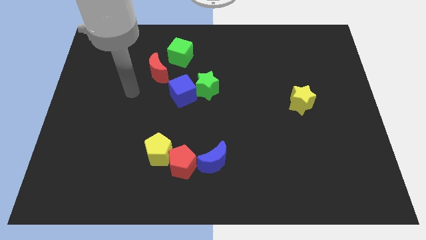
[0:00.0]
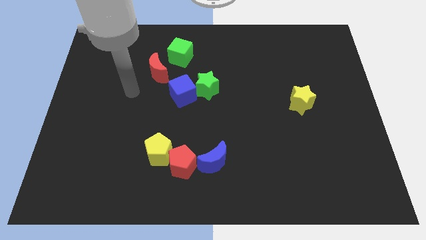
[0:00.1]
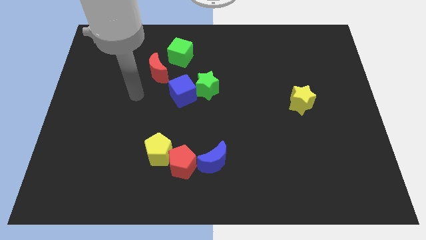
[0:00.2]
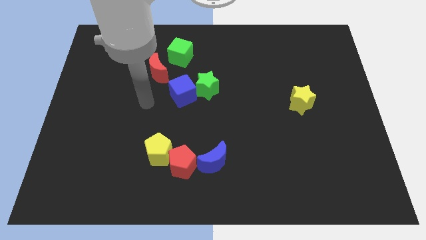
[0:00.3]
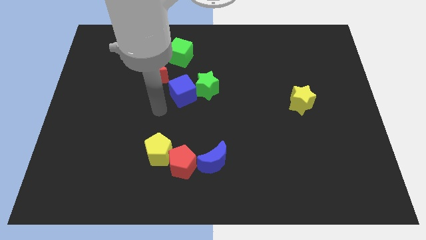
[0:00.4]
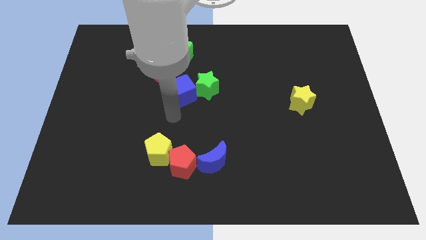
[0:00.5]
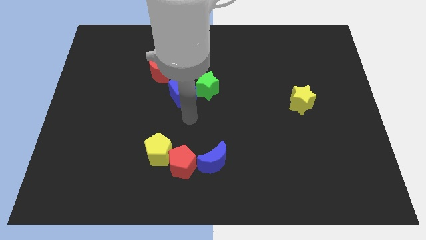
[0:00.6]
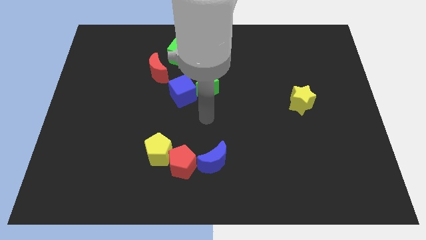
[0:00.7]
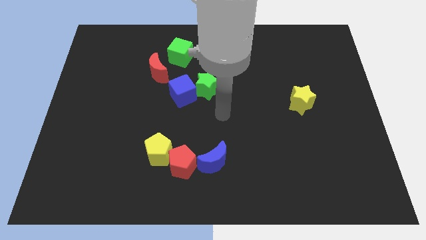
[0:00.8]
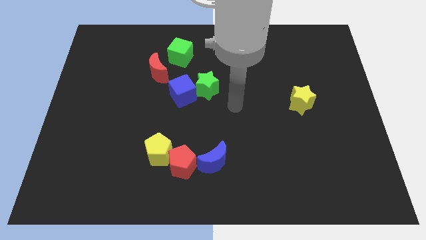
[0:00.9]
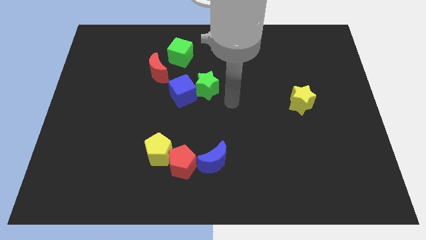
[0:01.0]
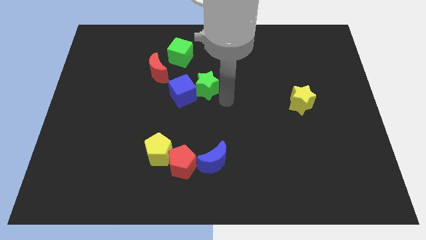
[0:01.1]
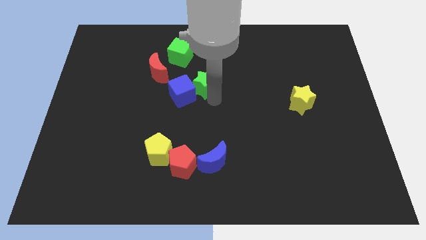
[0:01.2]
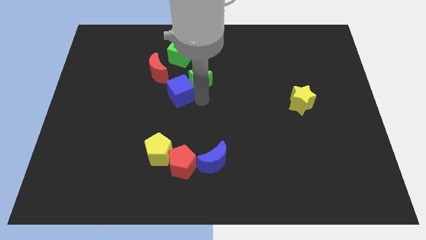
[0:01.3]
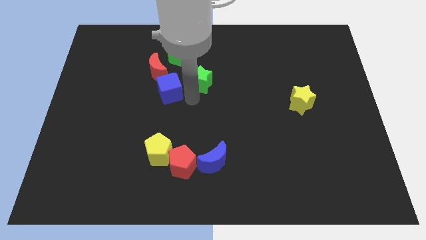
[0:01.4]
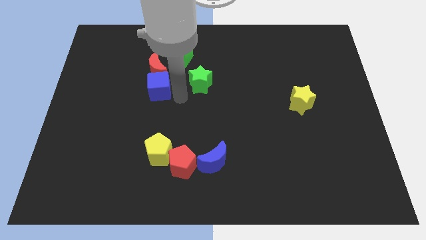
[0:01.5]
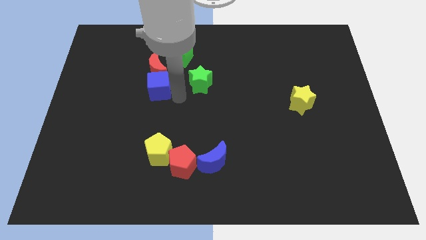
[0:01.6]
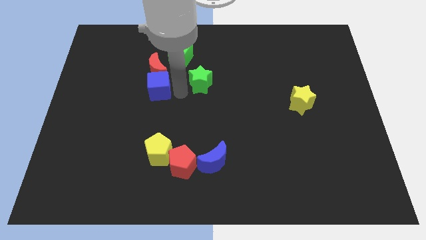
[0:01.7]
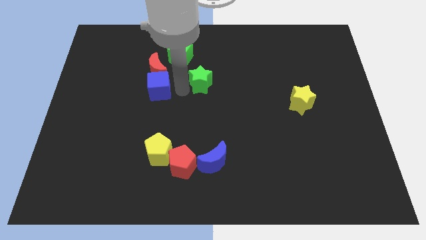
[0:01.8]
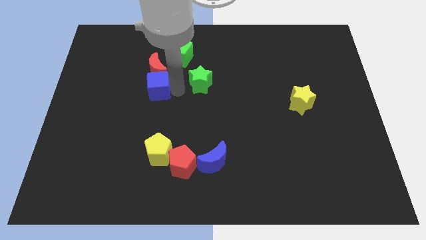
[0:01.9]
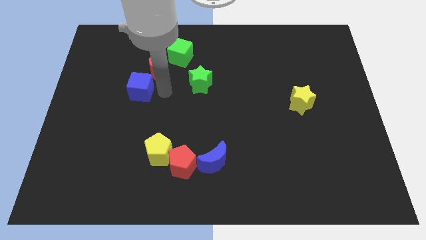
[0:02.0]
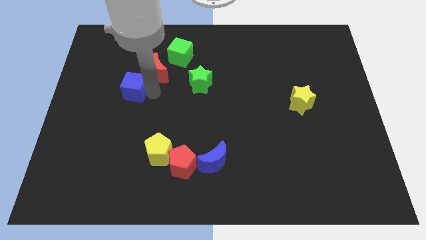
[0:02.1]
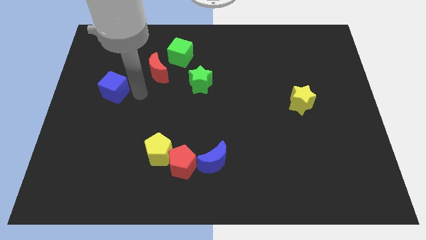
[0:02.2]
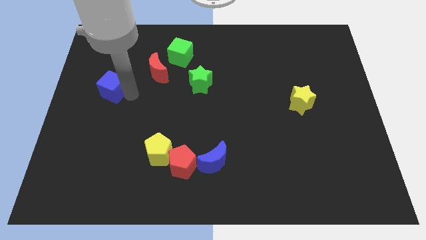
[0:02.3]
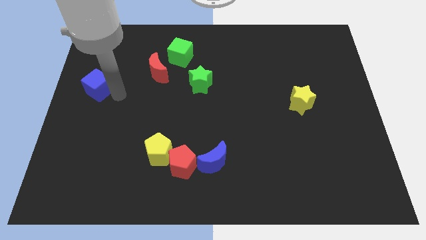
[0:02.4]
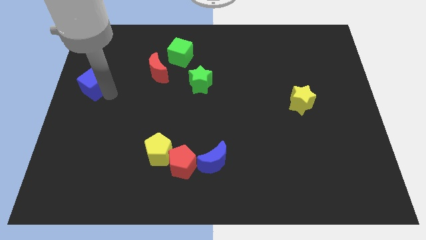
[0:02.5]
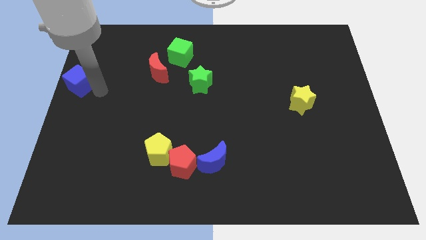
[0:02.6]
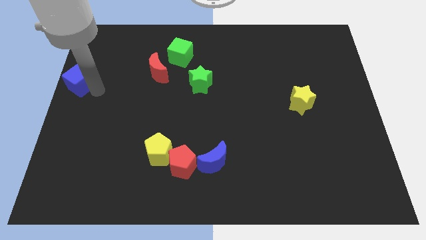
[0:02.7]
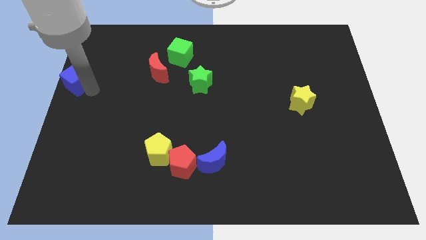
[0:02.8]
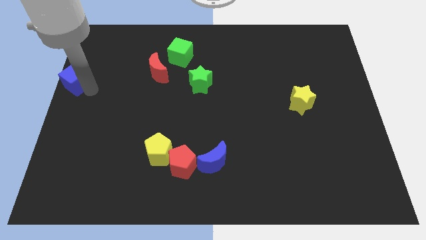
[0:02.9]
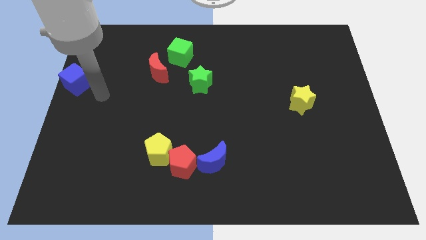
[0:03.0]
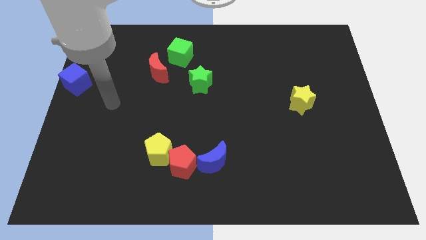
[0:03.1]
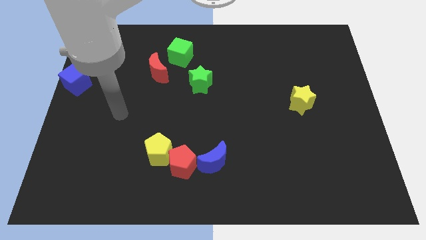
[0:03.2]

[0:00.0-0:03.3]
move the blue cube to the left side of the board
